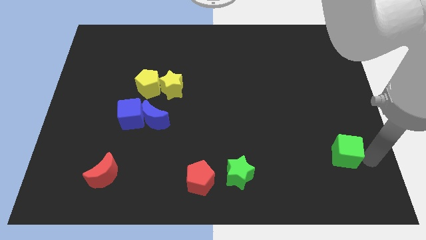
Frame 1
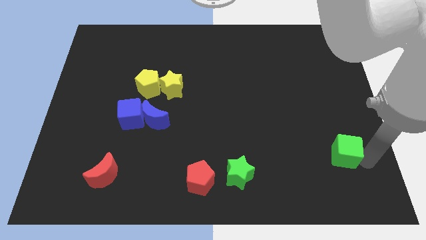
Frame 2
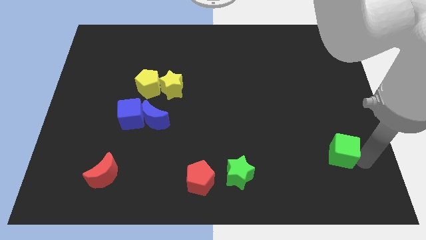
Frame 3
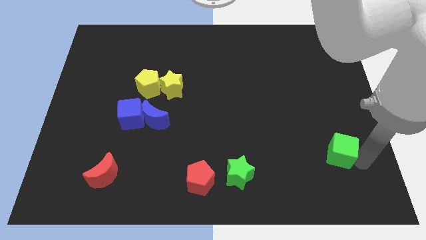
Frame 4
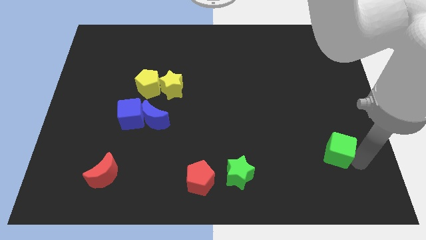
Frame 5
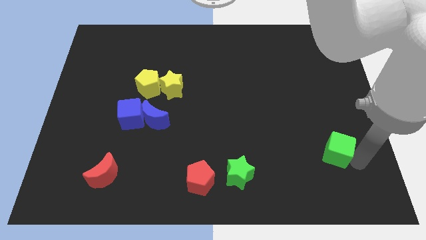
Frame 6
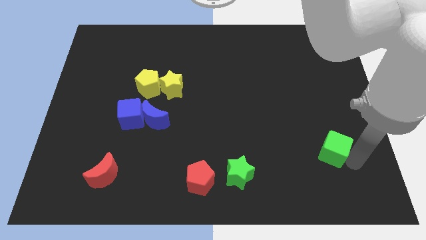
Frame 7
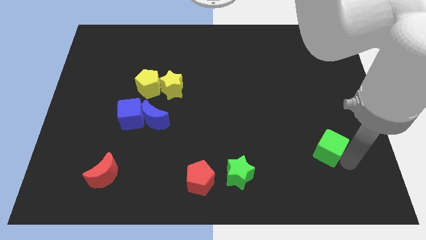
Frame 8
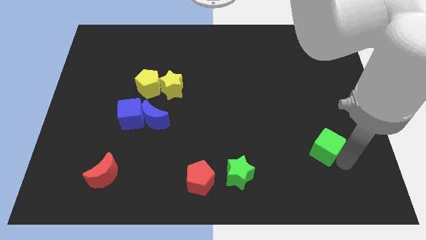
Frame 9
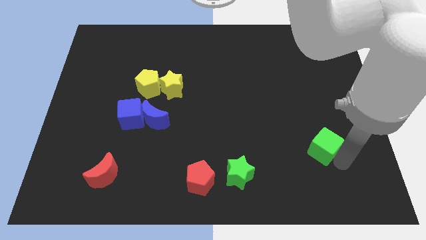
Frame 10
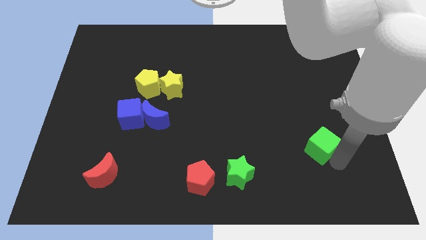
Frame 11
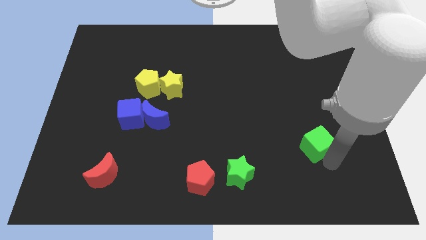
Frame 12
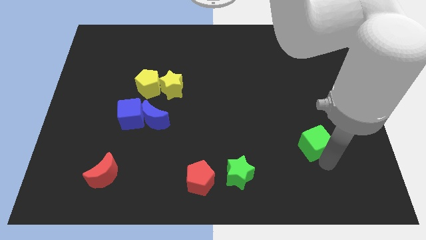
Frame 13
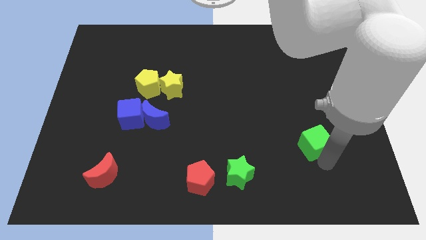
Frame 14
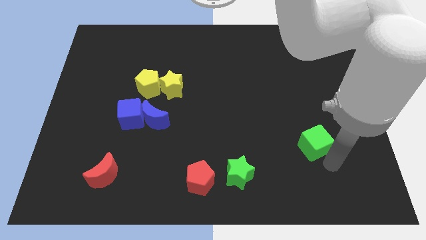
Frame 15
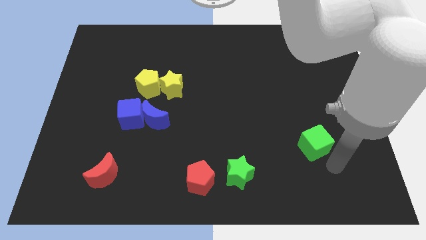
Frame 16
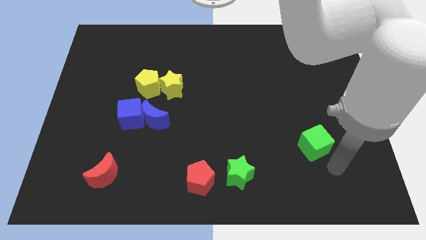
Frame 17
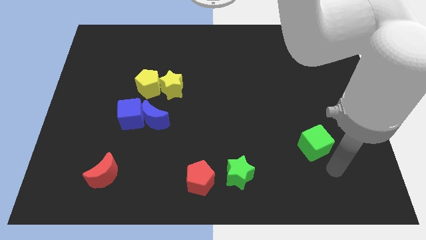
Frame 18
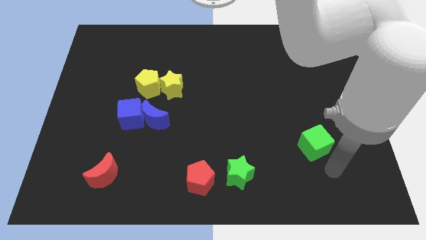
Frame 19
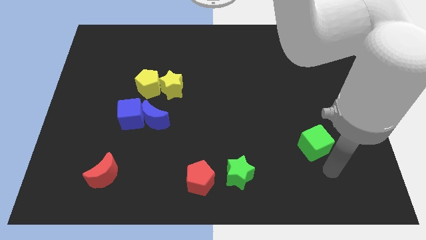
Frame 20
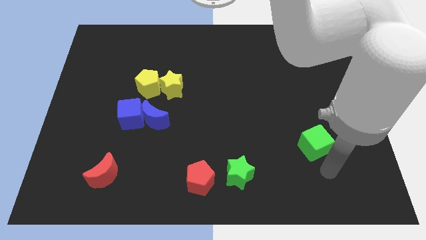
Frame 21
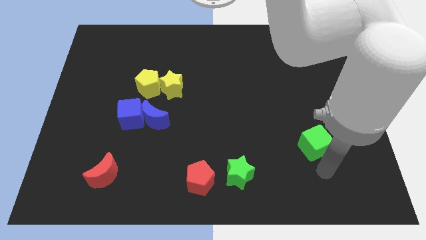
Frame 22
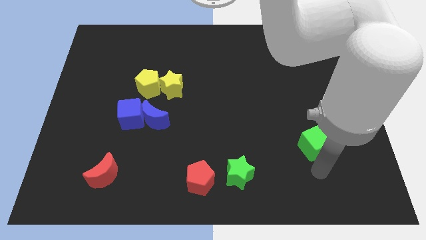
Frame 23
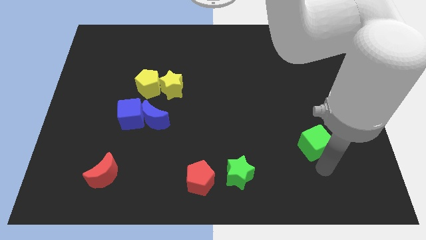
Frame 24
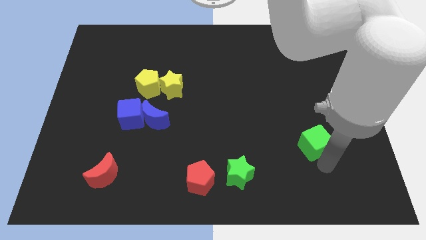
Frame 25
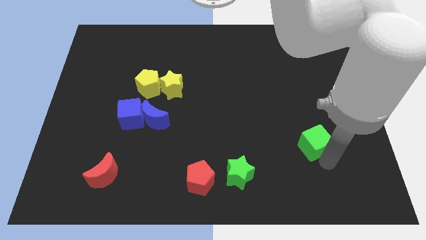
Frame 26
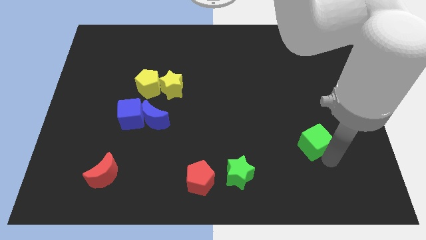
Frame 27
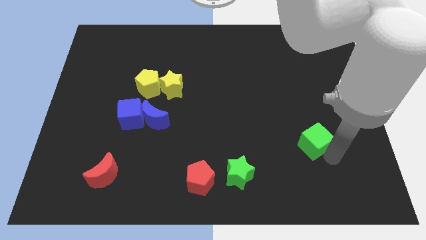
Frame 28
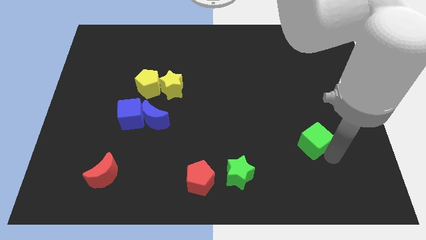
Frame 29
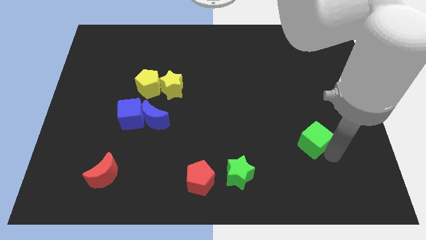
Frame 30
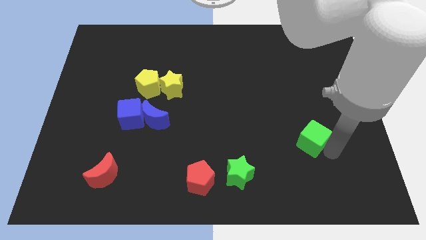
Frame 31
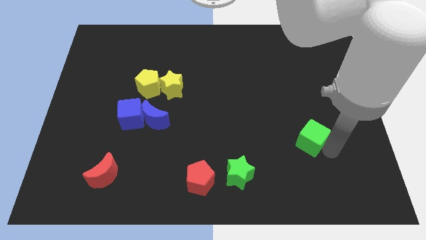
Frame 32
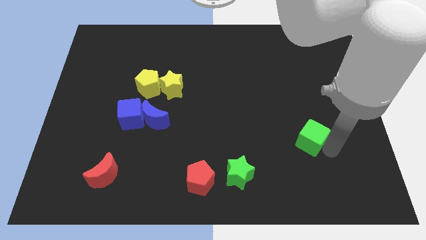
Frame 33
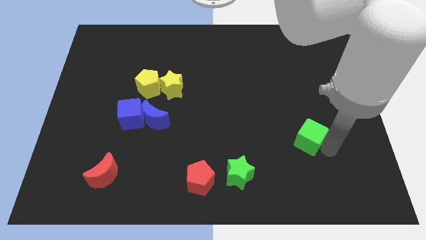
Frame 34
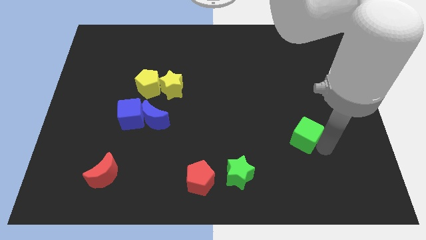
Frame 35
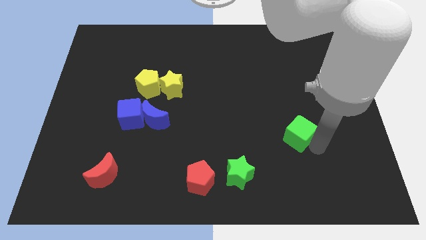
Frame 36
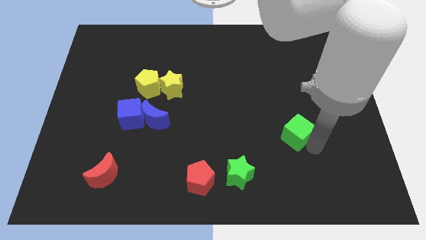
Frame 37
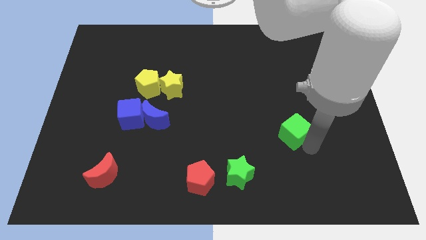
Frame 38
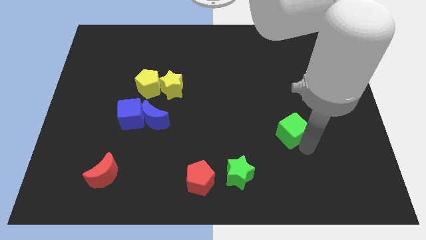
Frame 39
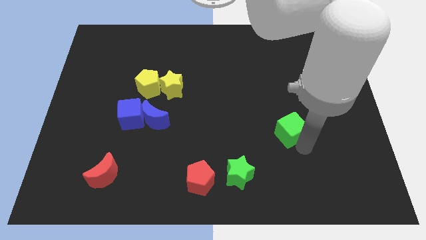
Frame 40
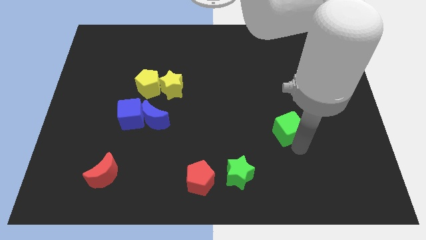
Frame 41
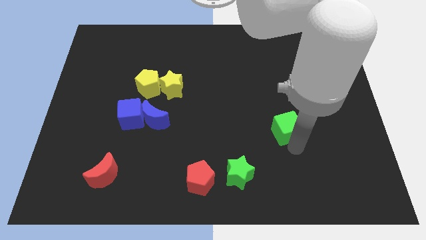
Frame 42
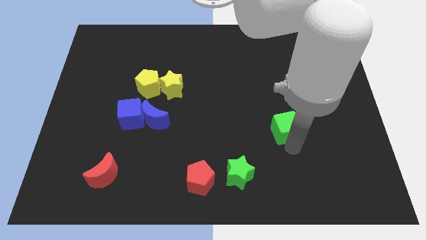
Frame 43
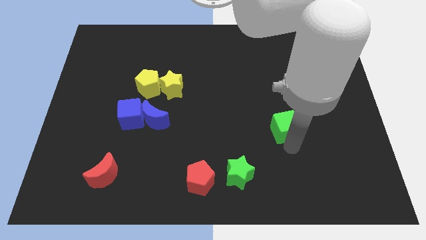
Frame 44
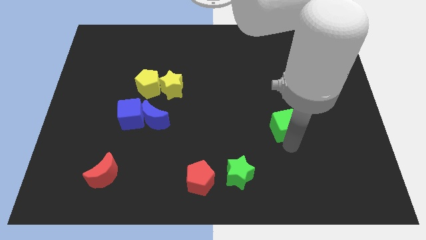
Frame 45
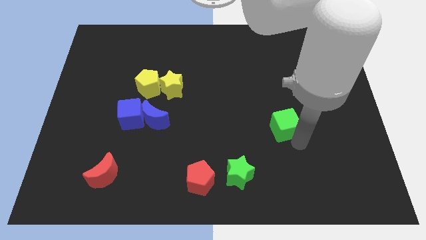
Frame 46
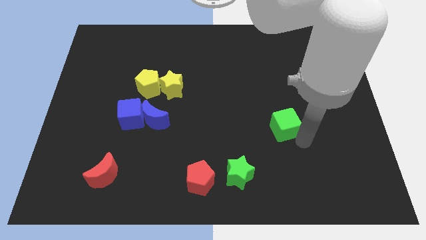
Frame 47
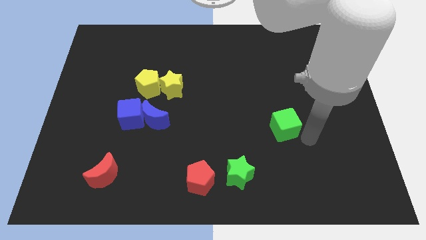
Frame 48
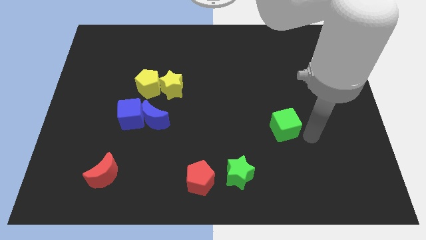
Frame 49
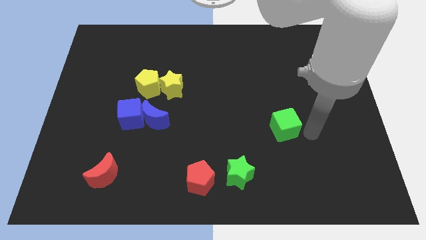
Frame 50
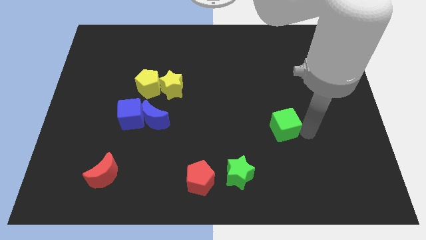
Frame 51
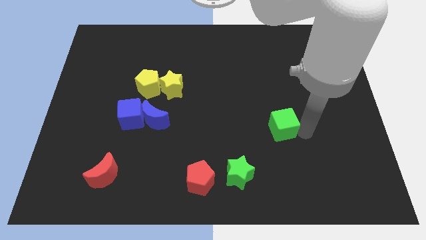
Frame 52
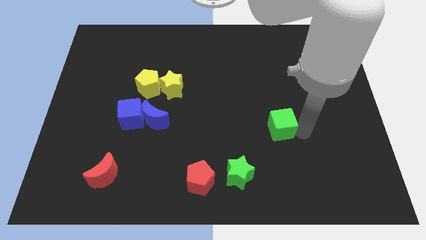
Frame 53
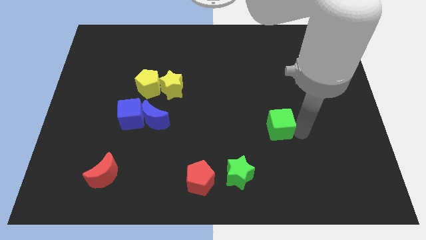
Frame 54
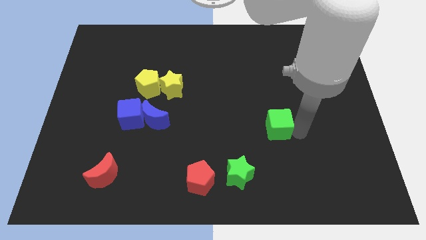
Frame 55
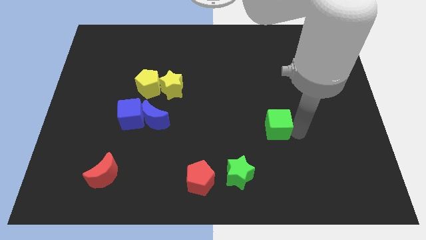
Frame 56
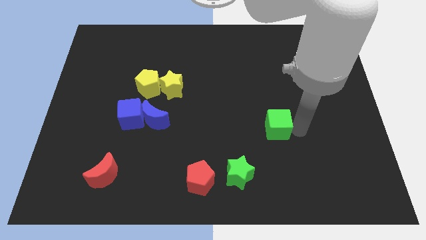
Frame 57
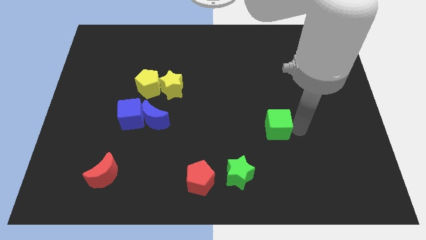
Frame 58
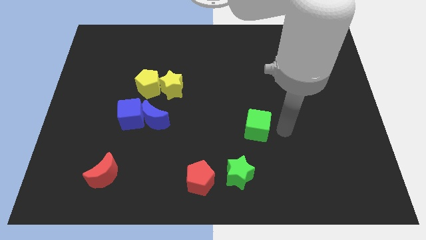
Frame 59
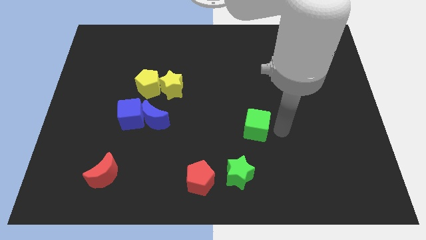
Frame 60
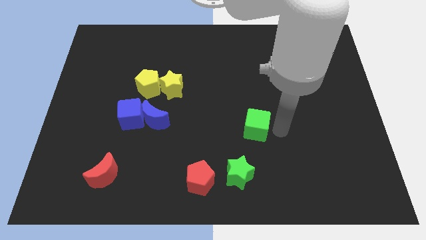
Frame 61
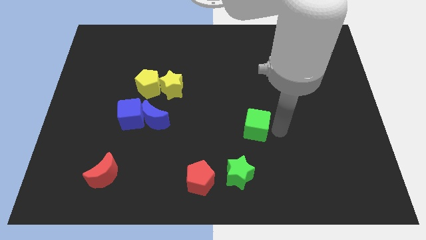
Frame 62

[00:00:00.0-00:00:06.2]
push the green cube above the green star

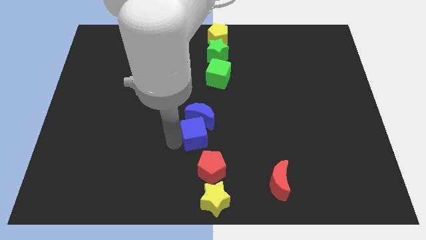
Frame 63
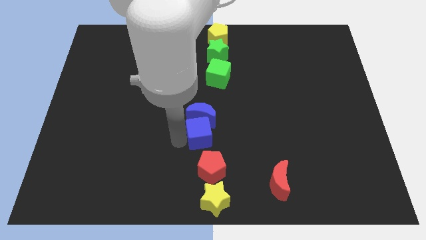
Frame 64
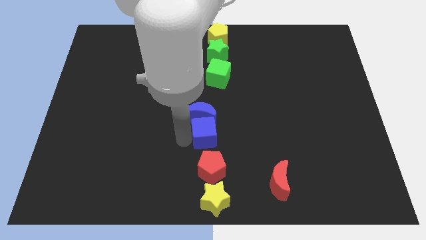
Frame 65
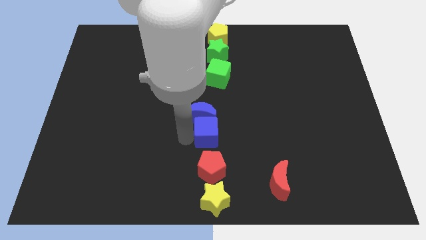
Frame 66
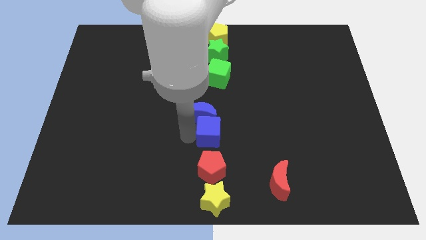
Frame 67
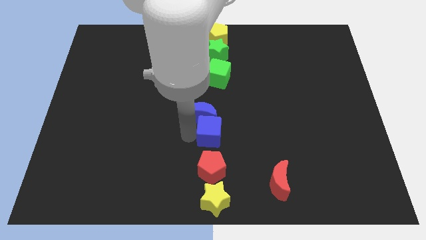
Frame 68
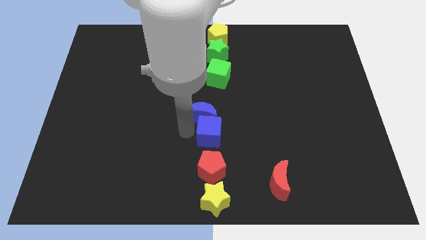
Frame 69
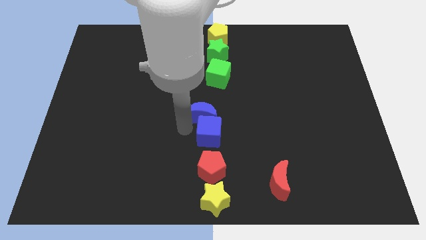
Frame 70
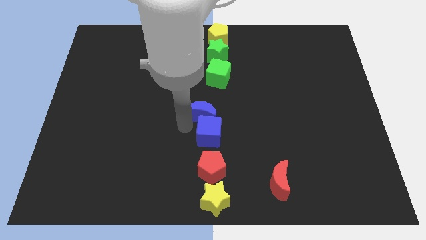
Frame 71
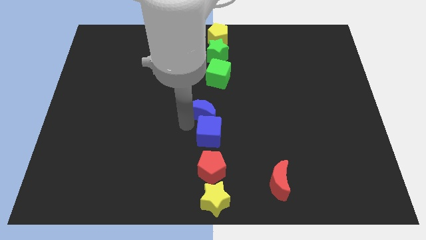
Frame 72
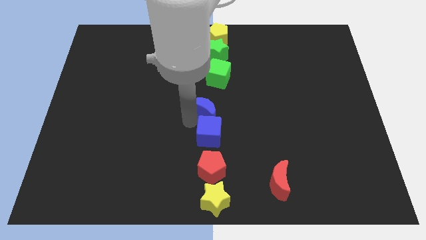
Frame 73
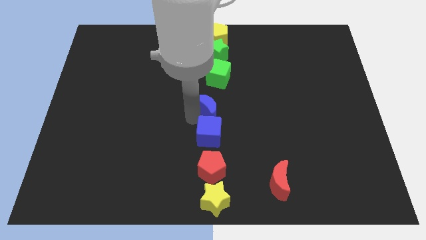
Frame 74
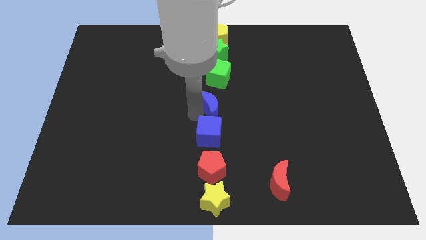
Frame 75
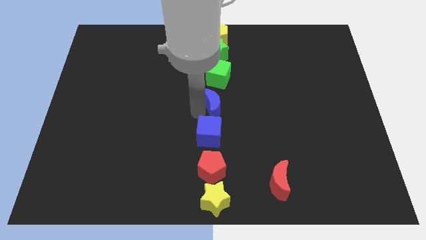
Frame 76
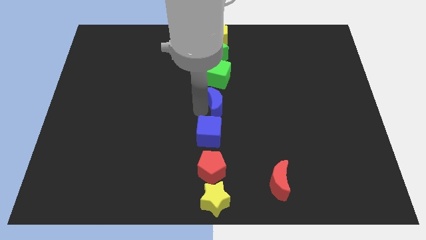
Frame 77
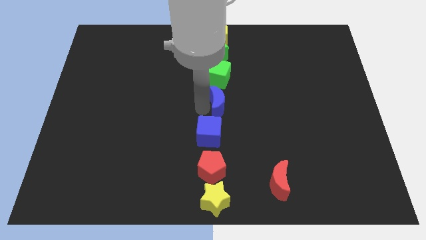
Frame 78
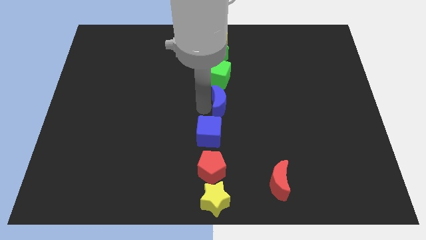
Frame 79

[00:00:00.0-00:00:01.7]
place the blue moon above the blue cube

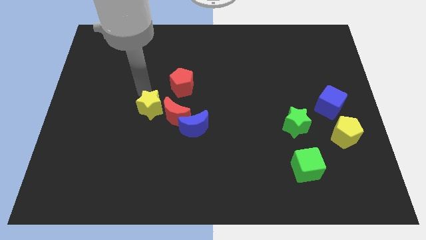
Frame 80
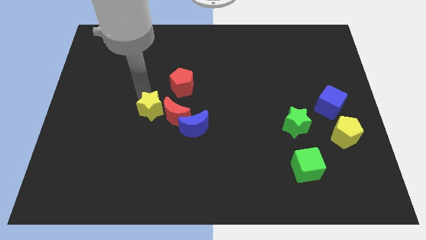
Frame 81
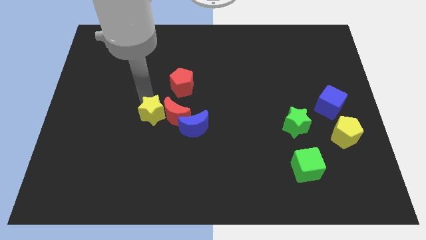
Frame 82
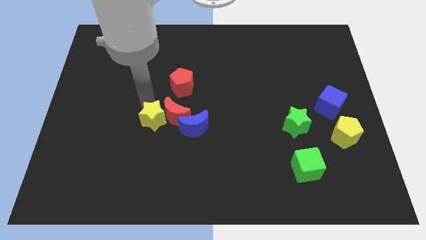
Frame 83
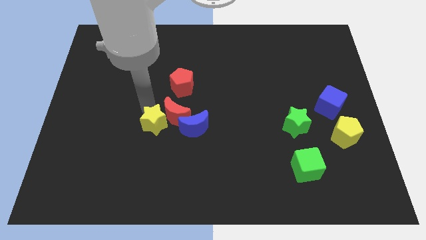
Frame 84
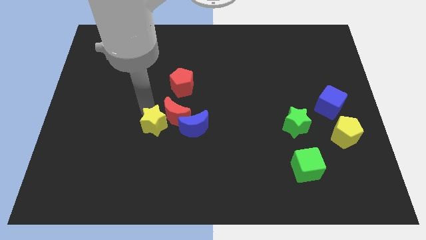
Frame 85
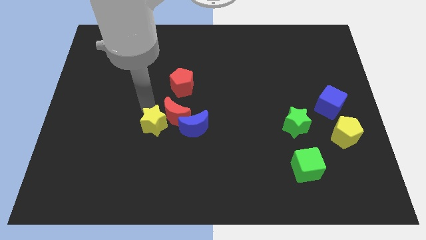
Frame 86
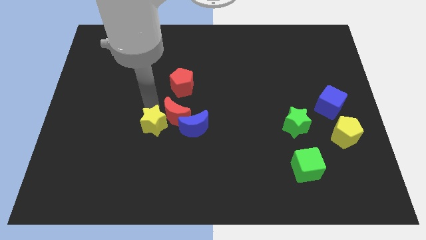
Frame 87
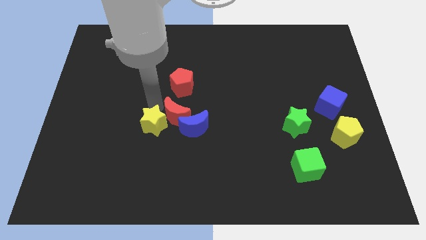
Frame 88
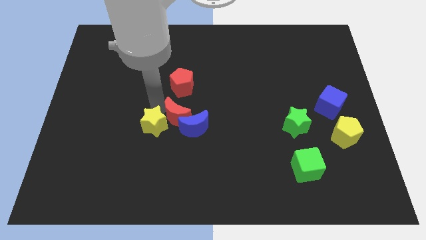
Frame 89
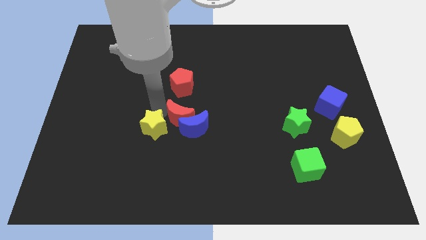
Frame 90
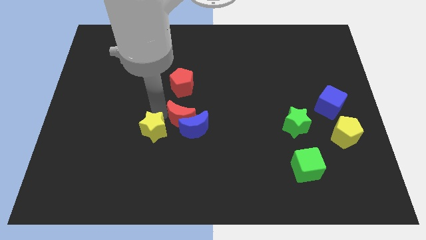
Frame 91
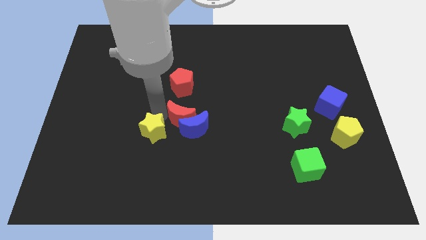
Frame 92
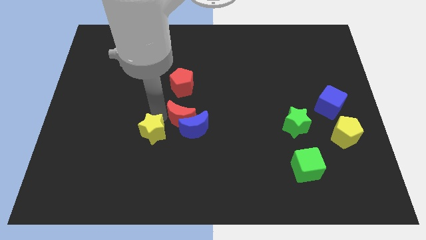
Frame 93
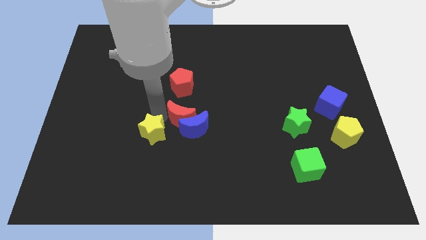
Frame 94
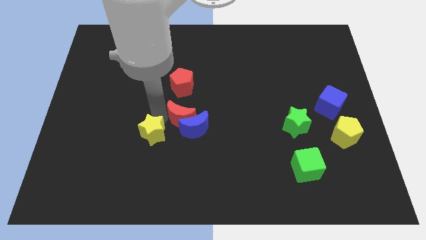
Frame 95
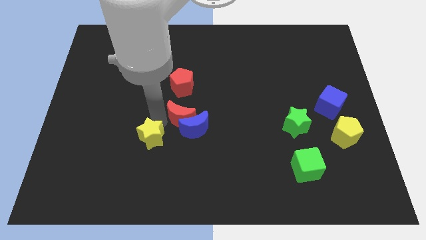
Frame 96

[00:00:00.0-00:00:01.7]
push the yellow star towards the bottom side of the board
